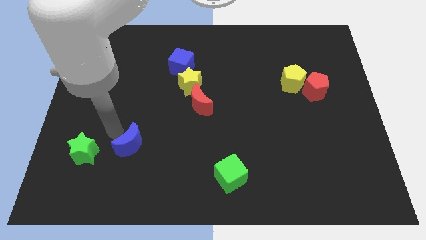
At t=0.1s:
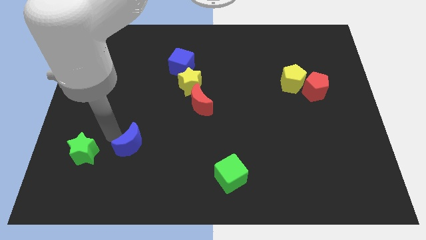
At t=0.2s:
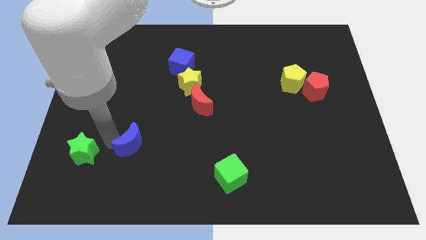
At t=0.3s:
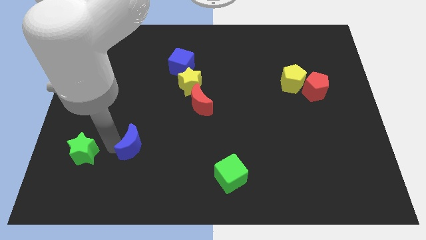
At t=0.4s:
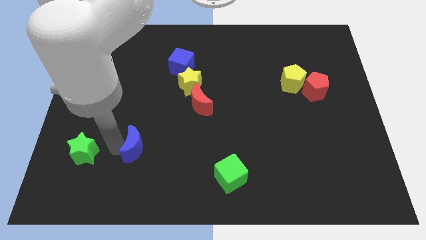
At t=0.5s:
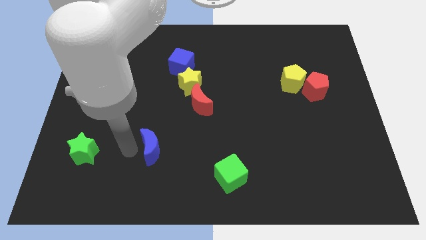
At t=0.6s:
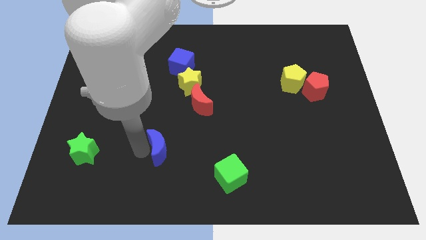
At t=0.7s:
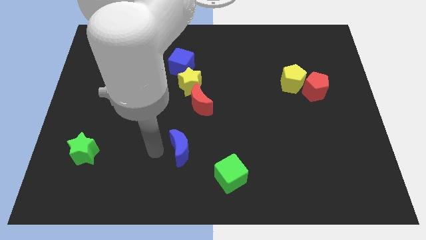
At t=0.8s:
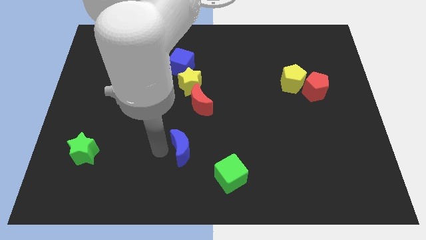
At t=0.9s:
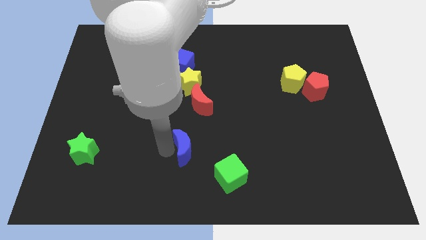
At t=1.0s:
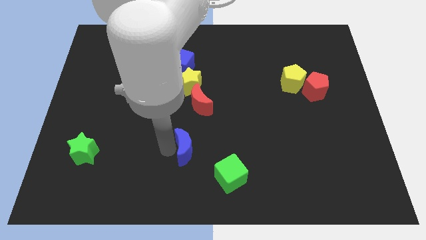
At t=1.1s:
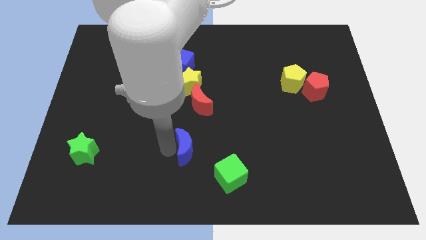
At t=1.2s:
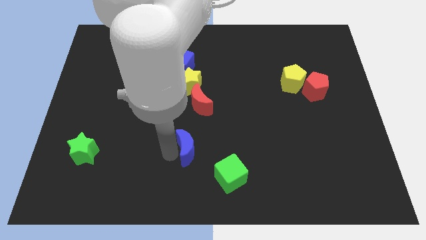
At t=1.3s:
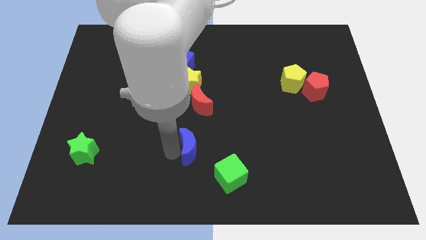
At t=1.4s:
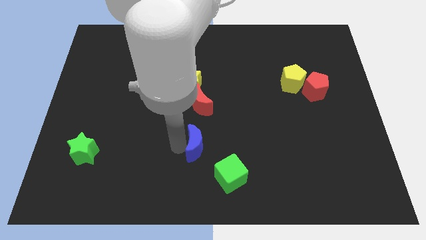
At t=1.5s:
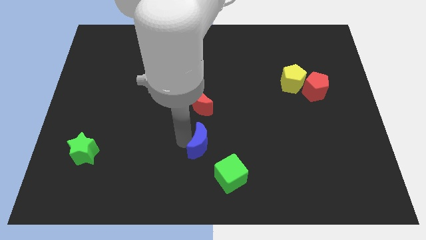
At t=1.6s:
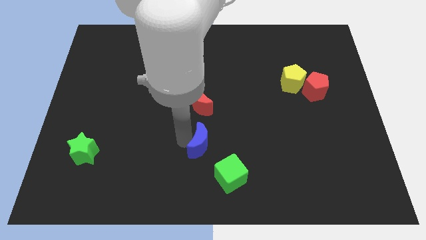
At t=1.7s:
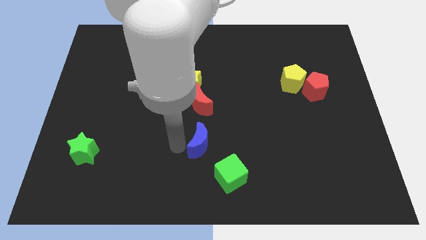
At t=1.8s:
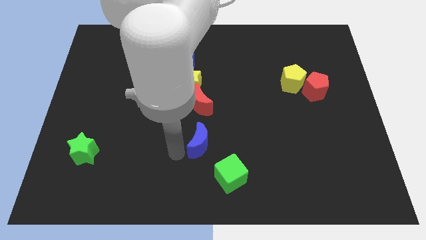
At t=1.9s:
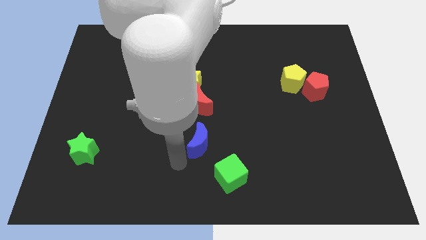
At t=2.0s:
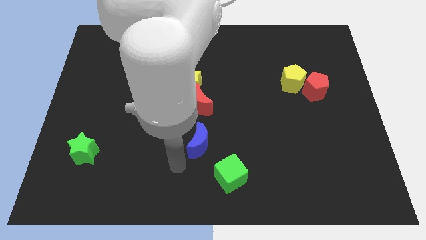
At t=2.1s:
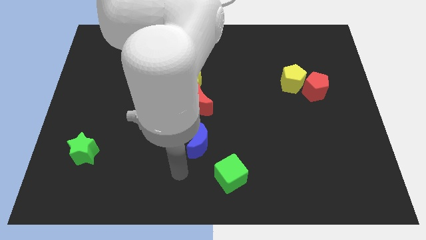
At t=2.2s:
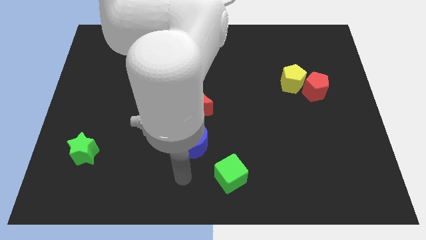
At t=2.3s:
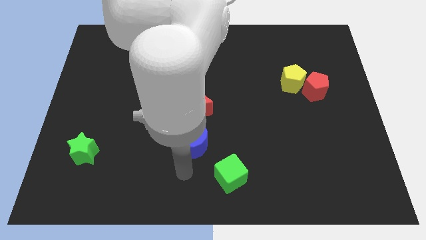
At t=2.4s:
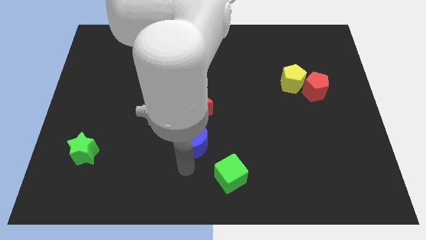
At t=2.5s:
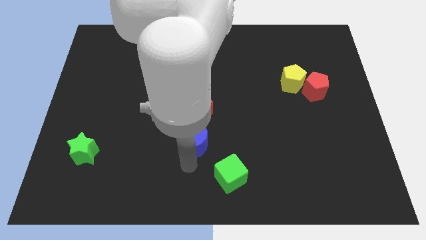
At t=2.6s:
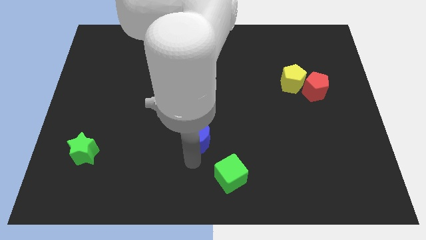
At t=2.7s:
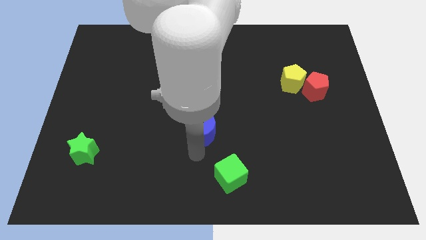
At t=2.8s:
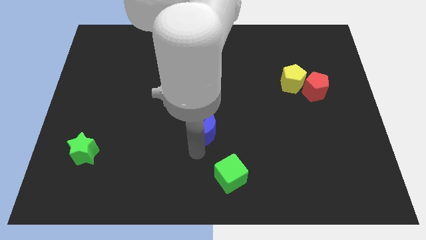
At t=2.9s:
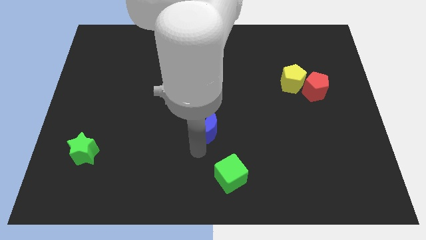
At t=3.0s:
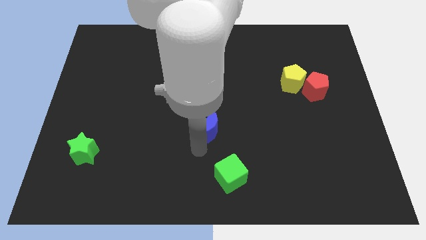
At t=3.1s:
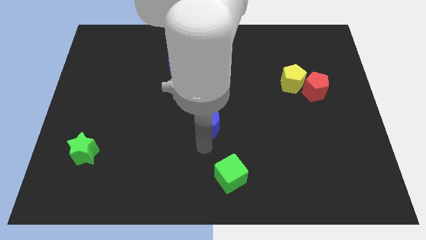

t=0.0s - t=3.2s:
place the blue moon in between the red moon and the green cube

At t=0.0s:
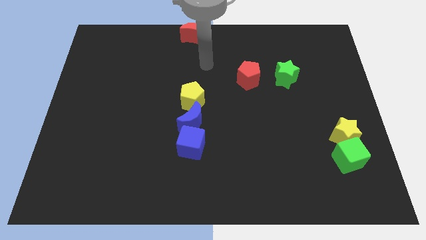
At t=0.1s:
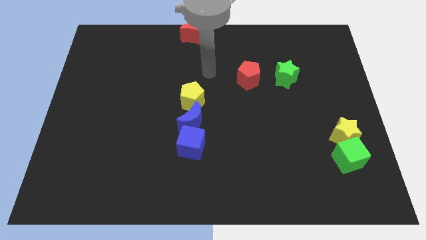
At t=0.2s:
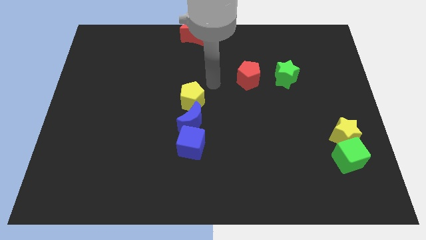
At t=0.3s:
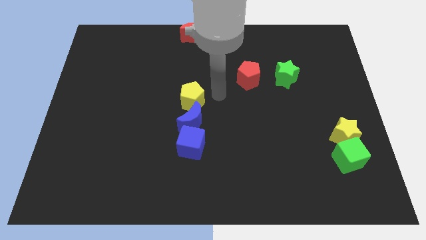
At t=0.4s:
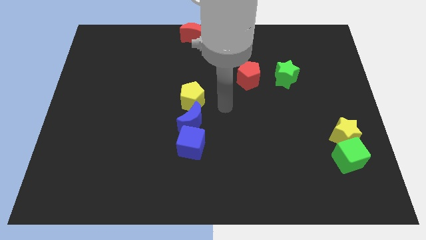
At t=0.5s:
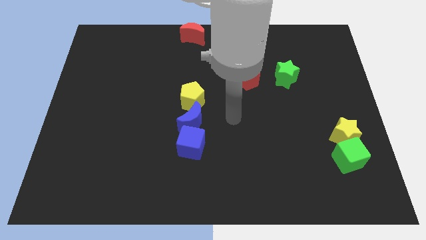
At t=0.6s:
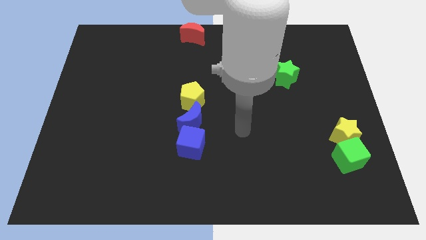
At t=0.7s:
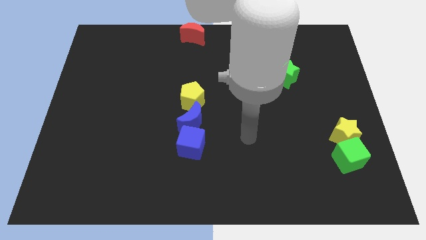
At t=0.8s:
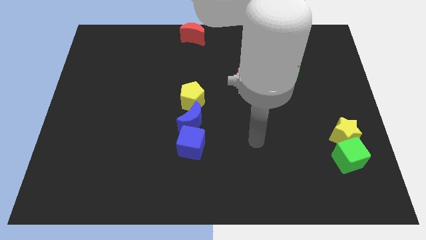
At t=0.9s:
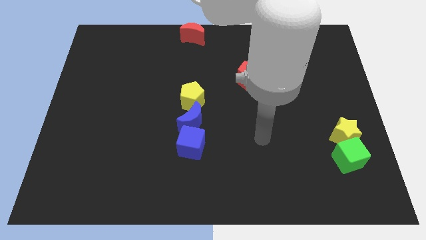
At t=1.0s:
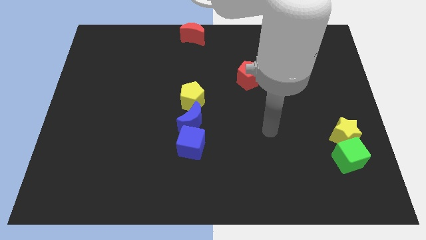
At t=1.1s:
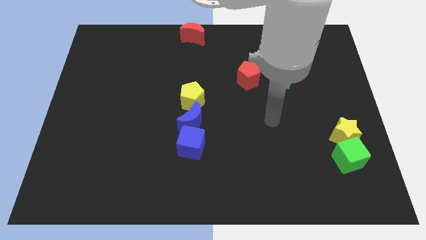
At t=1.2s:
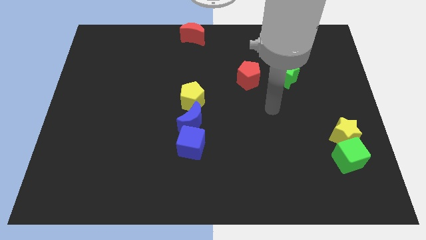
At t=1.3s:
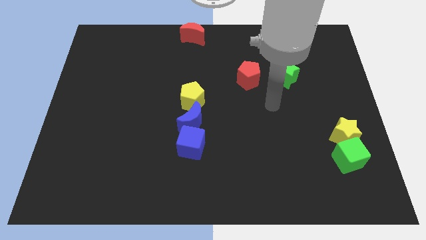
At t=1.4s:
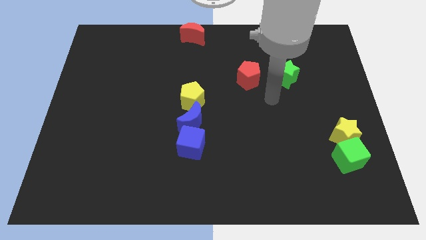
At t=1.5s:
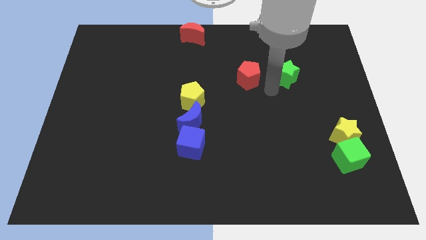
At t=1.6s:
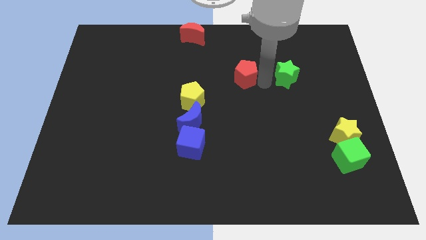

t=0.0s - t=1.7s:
move your arm towards the red pentagon

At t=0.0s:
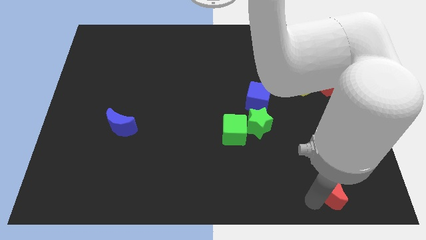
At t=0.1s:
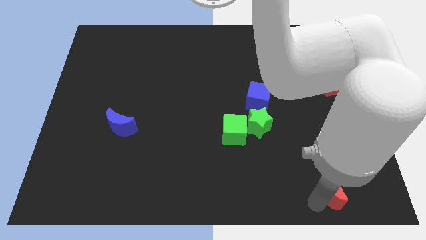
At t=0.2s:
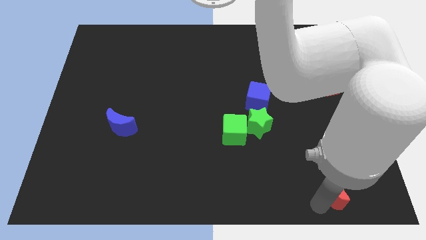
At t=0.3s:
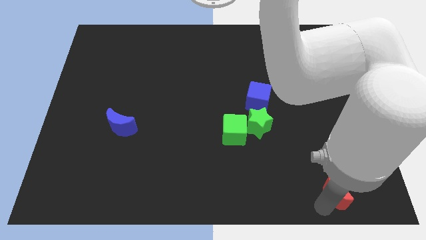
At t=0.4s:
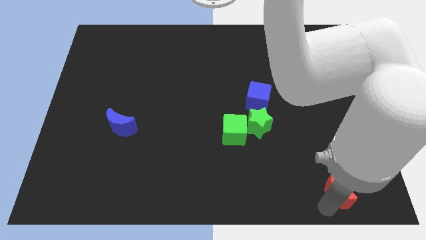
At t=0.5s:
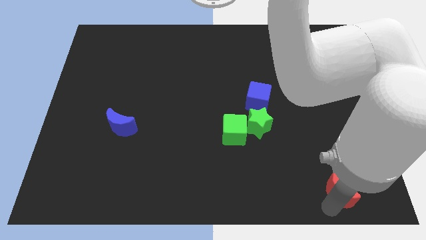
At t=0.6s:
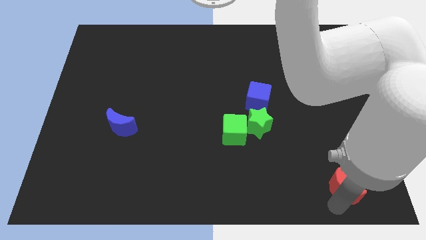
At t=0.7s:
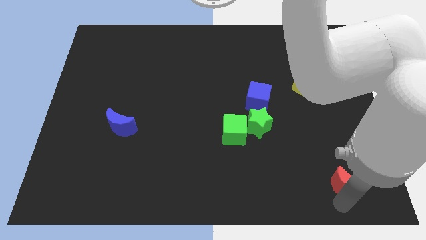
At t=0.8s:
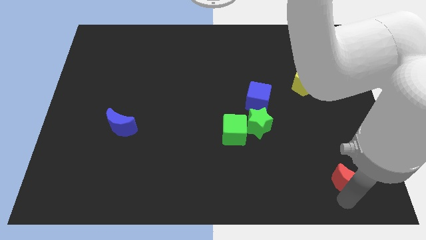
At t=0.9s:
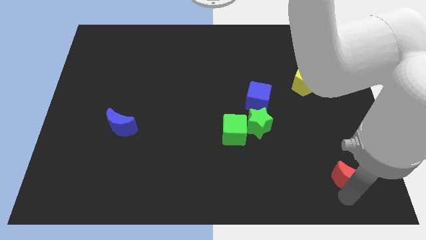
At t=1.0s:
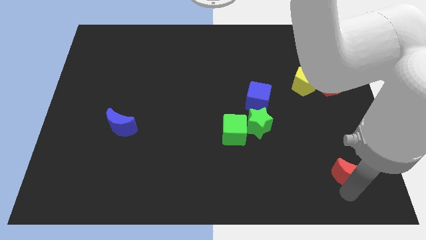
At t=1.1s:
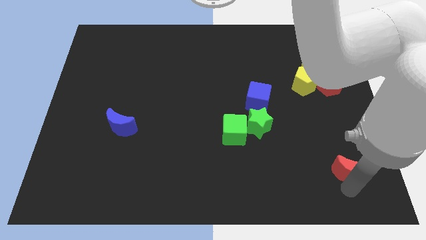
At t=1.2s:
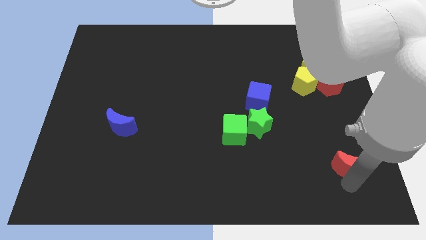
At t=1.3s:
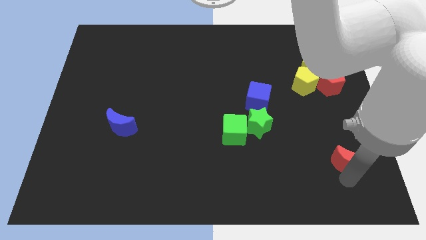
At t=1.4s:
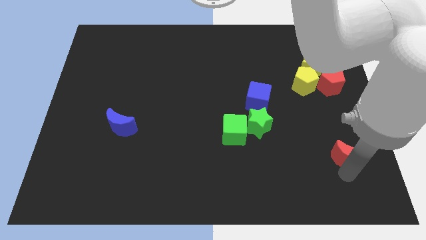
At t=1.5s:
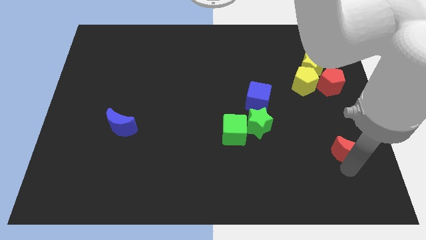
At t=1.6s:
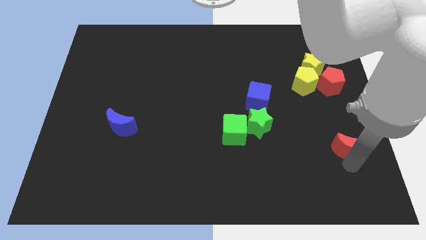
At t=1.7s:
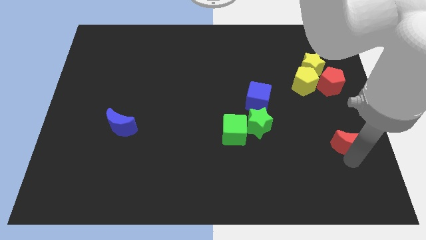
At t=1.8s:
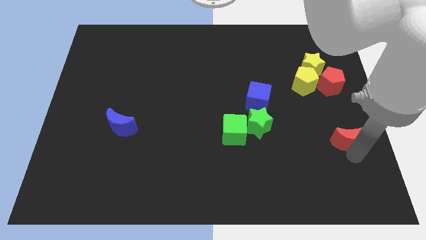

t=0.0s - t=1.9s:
slightly push the red moon towards up

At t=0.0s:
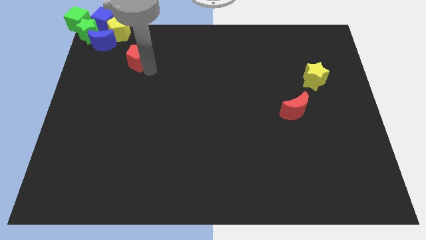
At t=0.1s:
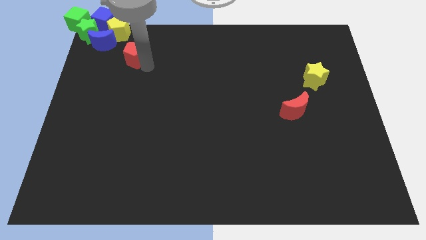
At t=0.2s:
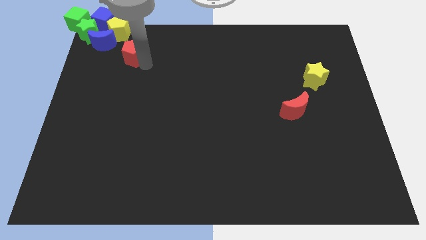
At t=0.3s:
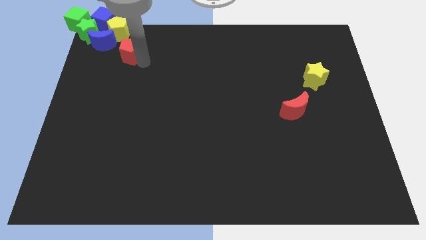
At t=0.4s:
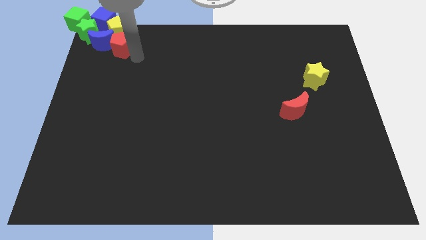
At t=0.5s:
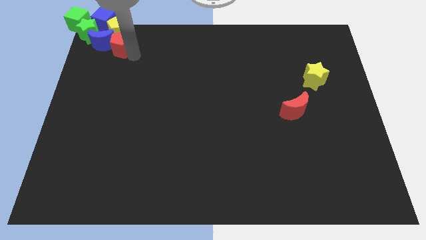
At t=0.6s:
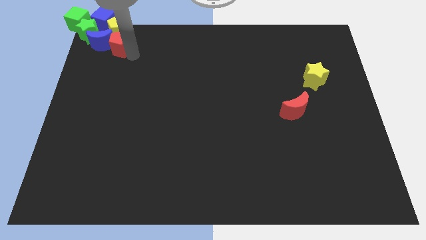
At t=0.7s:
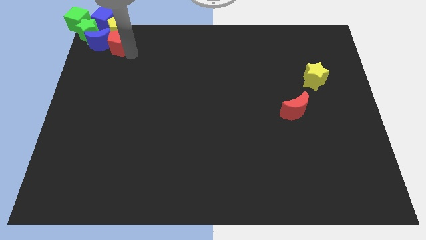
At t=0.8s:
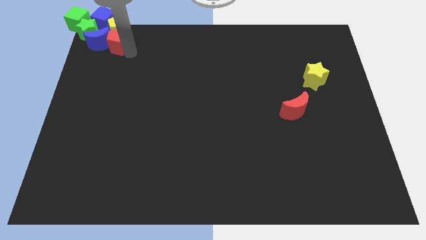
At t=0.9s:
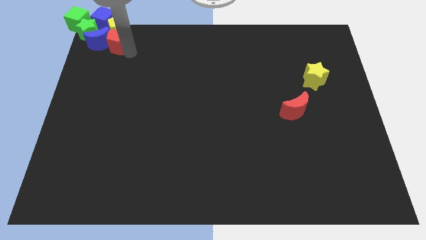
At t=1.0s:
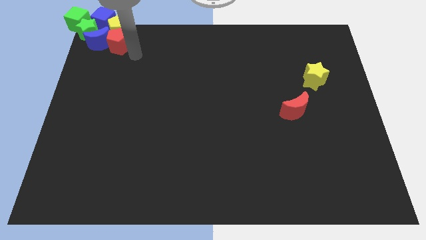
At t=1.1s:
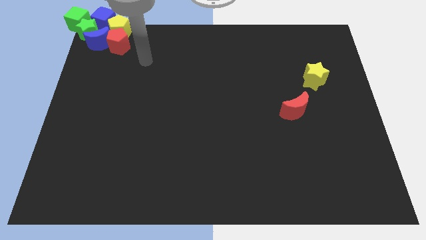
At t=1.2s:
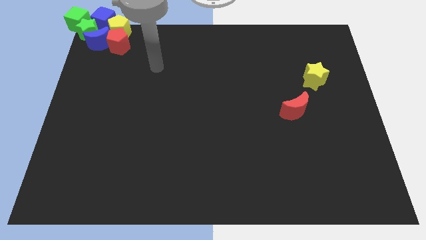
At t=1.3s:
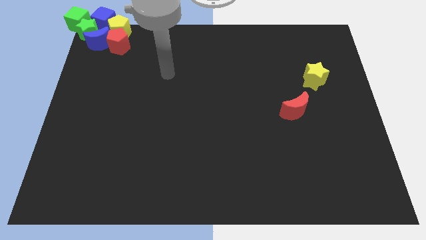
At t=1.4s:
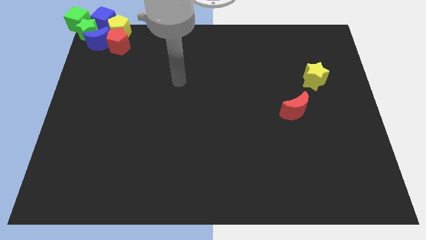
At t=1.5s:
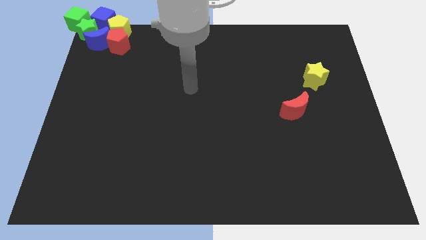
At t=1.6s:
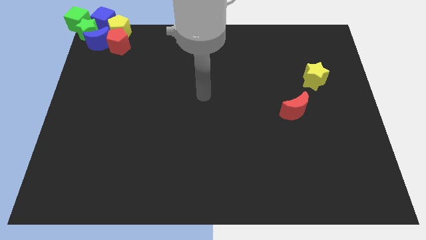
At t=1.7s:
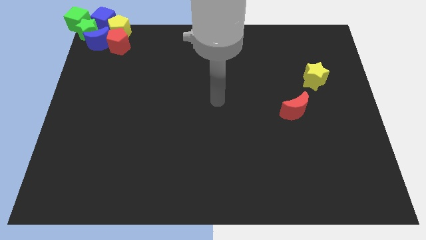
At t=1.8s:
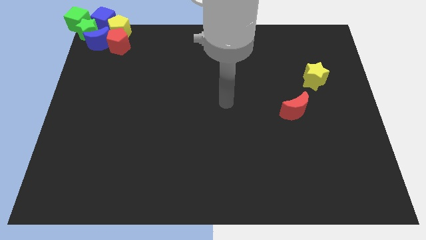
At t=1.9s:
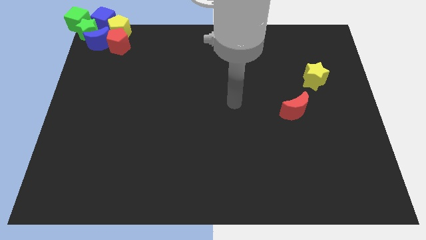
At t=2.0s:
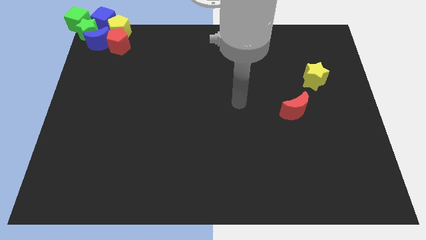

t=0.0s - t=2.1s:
move the red pentagon to the bottom of the yellow pentagon

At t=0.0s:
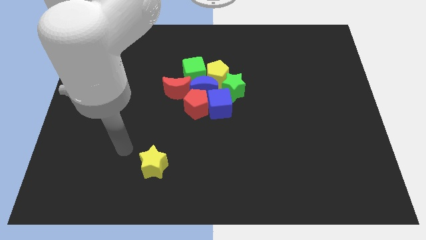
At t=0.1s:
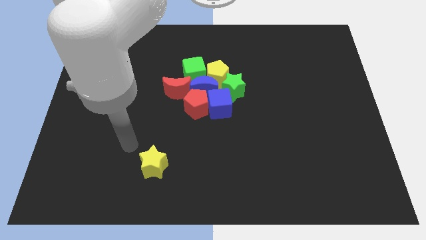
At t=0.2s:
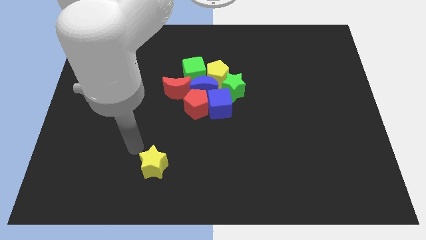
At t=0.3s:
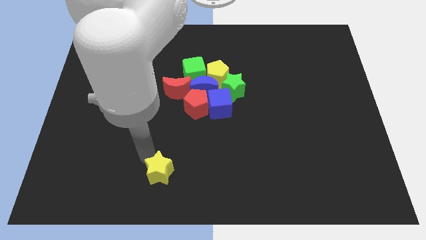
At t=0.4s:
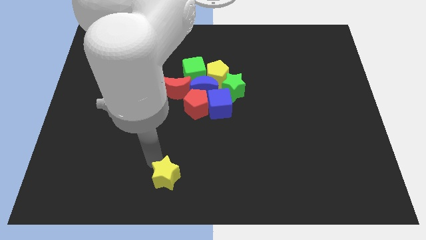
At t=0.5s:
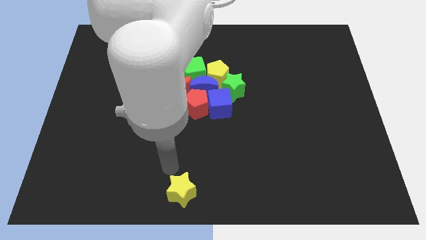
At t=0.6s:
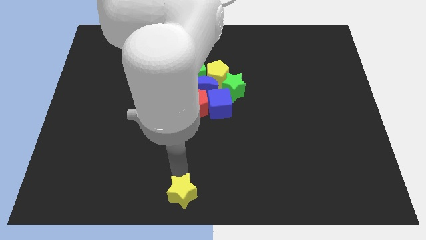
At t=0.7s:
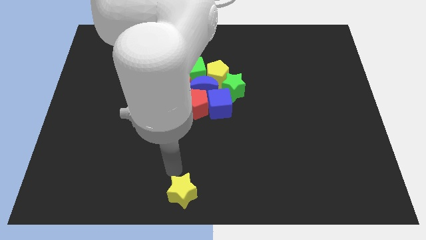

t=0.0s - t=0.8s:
push the yellow star below the red pentagon
